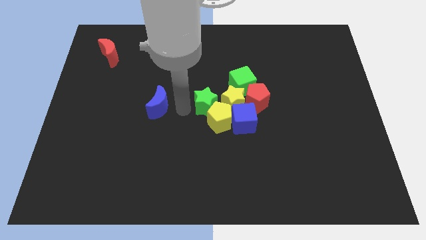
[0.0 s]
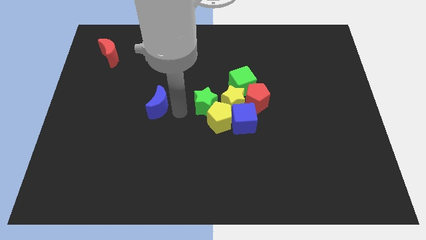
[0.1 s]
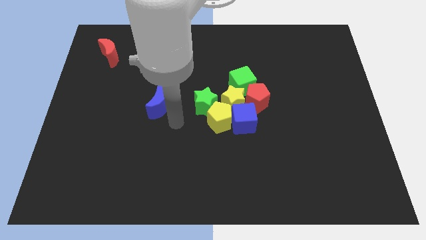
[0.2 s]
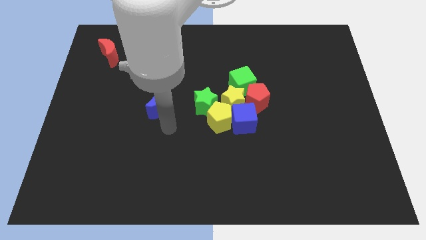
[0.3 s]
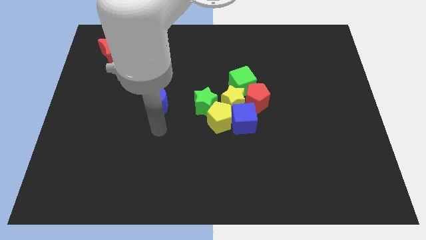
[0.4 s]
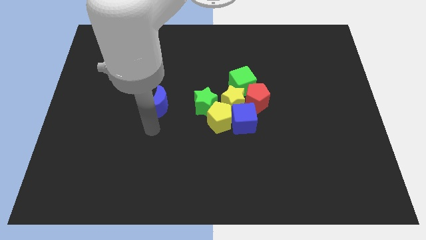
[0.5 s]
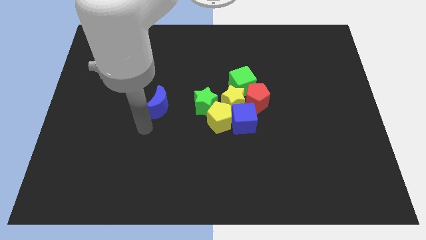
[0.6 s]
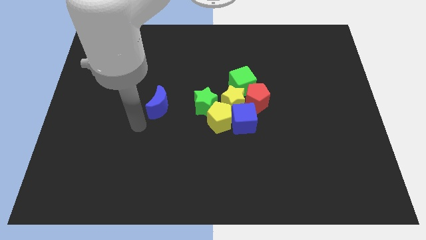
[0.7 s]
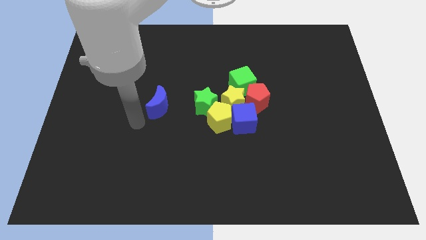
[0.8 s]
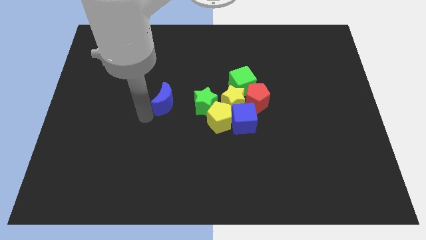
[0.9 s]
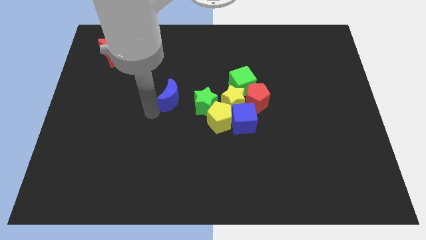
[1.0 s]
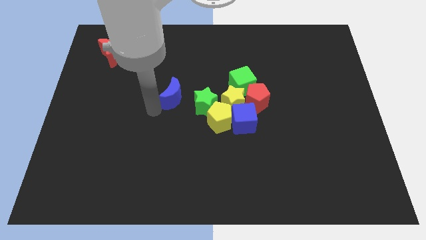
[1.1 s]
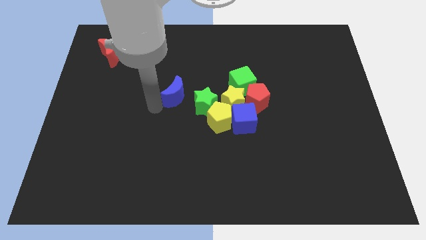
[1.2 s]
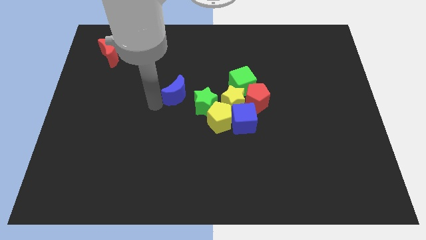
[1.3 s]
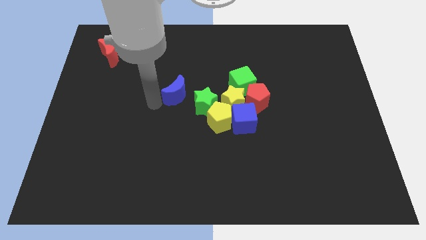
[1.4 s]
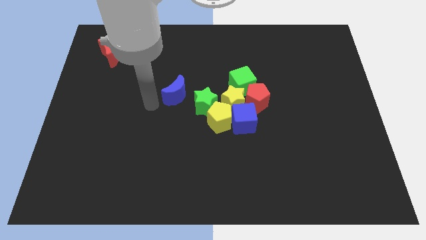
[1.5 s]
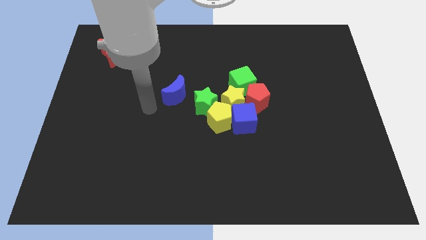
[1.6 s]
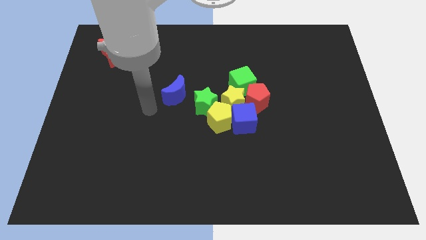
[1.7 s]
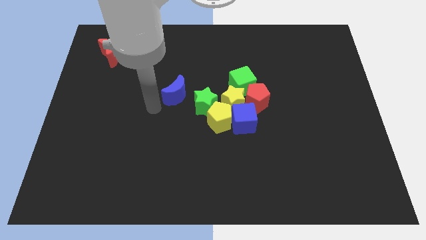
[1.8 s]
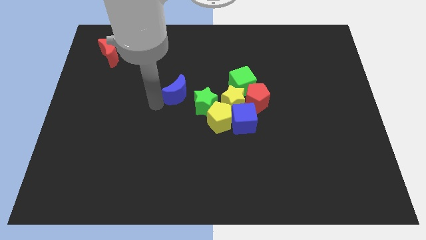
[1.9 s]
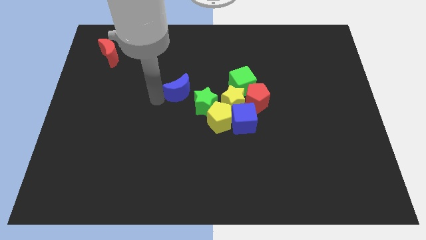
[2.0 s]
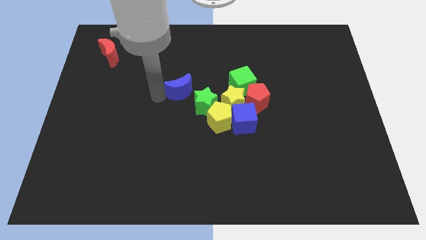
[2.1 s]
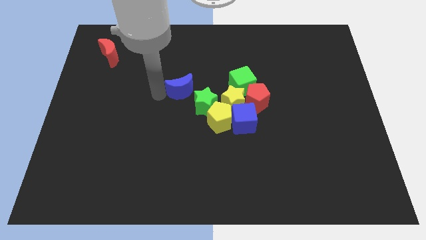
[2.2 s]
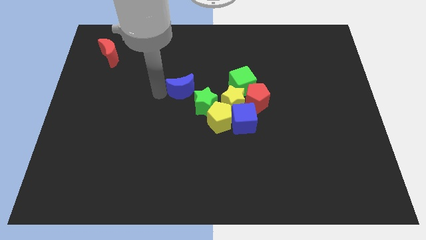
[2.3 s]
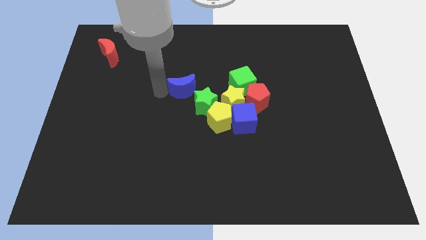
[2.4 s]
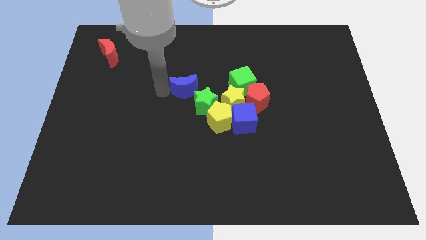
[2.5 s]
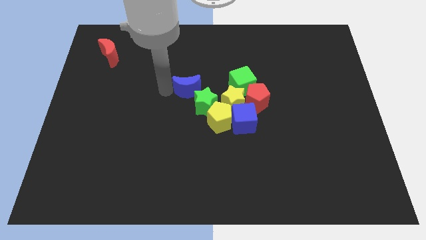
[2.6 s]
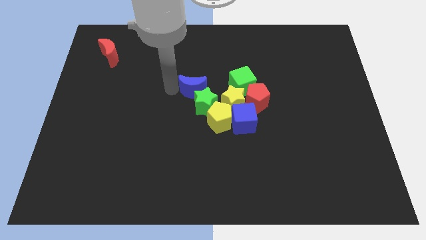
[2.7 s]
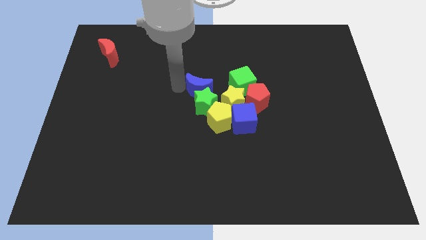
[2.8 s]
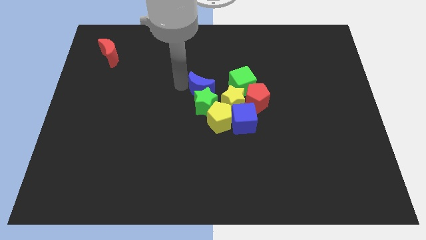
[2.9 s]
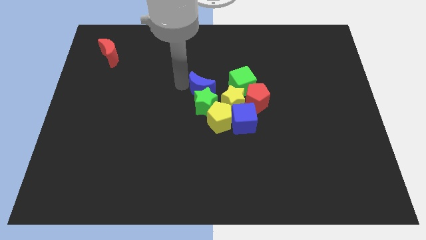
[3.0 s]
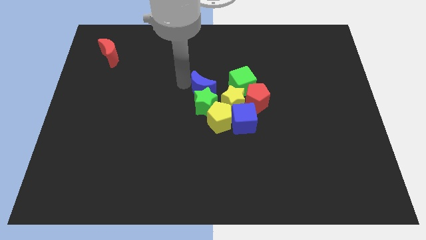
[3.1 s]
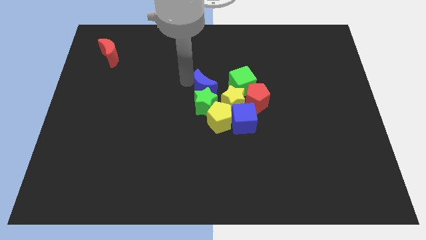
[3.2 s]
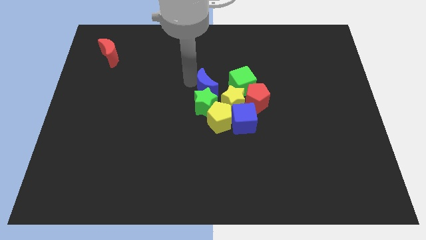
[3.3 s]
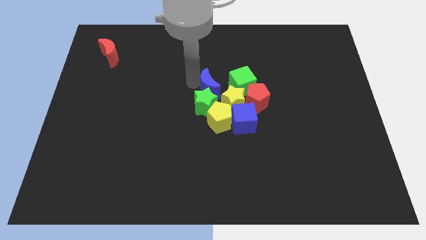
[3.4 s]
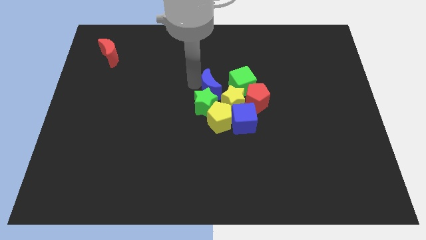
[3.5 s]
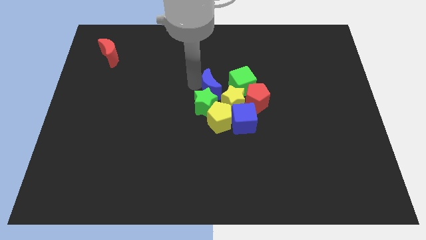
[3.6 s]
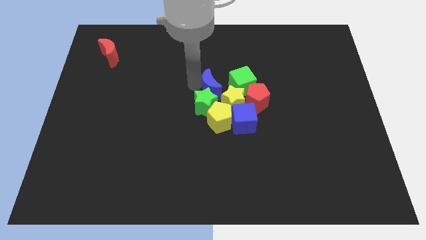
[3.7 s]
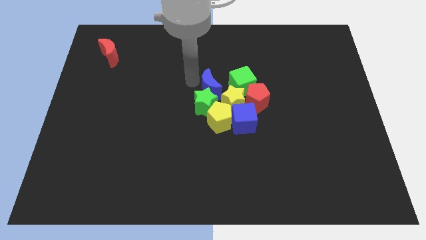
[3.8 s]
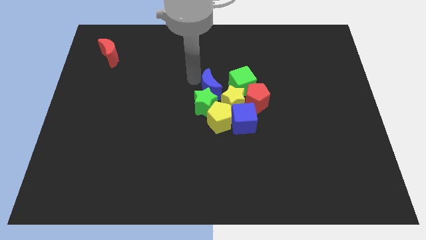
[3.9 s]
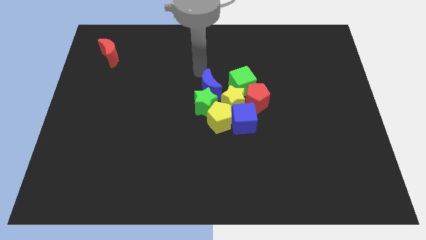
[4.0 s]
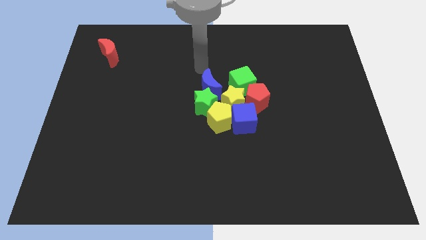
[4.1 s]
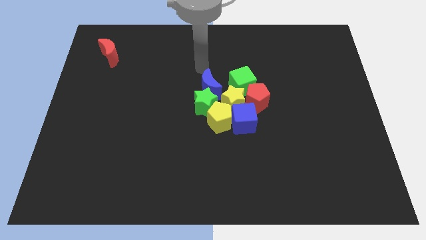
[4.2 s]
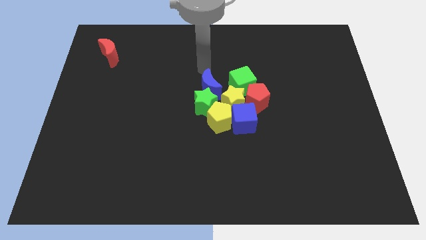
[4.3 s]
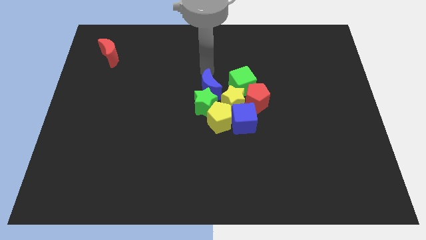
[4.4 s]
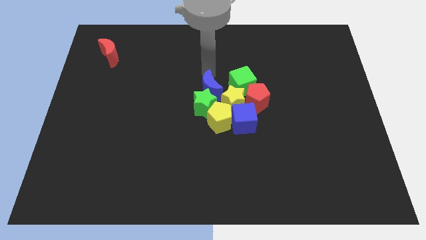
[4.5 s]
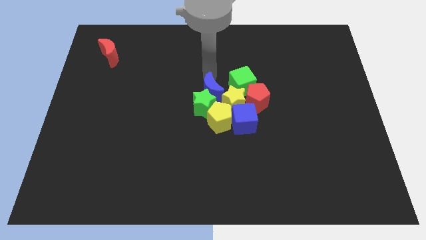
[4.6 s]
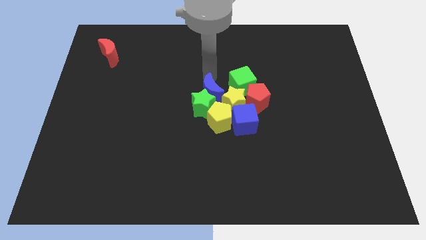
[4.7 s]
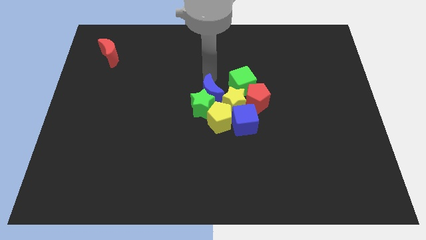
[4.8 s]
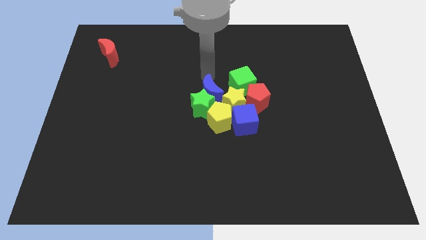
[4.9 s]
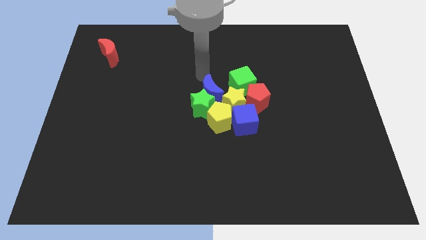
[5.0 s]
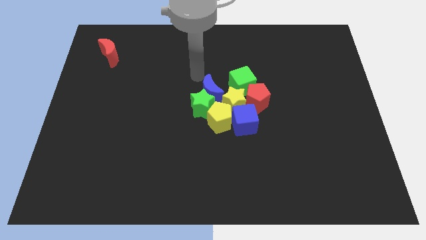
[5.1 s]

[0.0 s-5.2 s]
place the blue crescent in between the green star and green cube

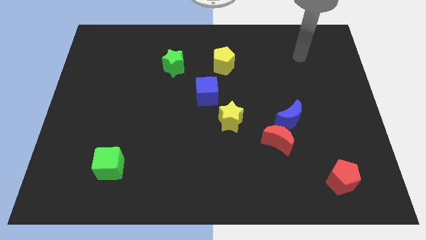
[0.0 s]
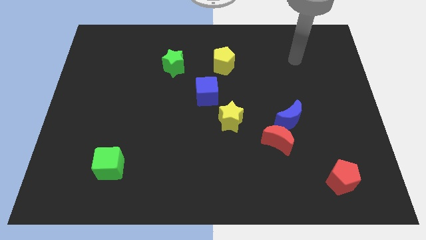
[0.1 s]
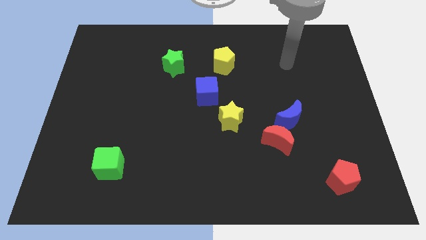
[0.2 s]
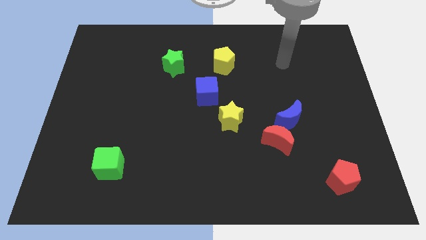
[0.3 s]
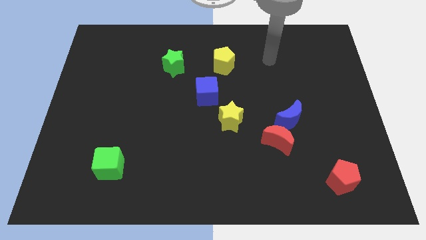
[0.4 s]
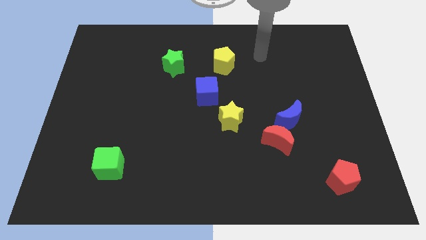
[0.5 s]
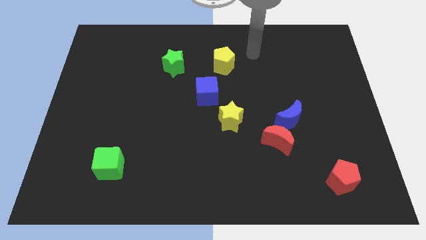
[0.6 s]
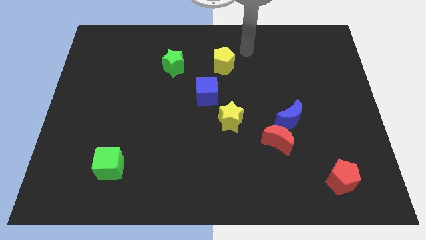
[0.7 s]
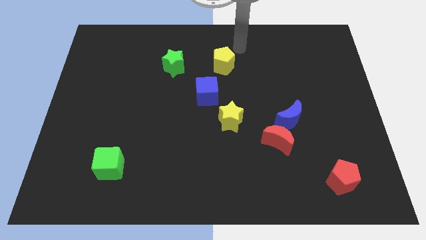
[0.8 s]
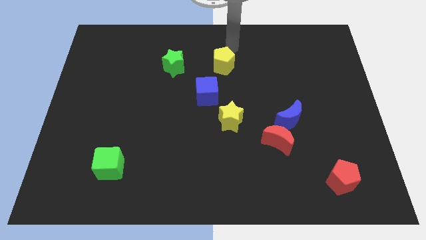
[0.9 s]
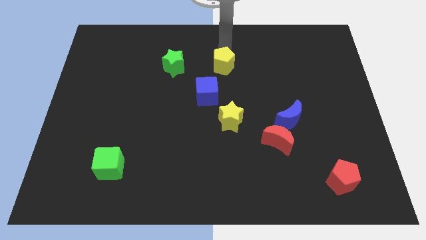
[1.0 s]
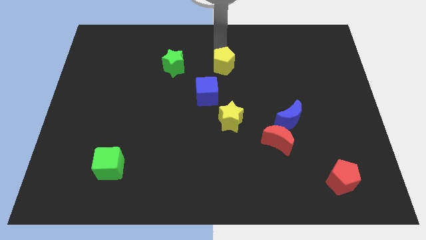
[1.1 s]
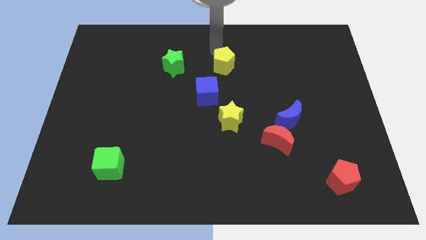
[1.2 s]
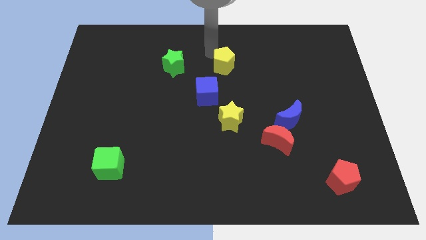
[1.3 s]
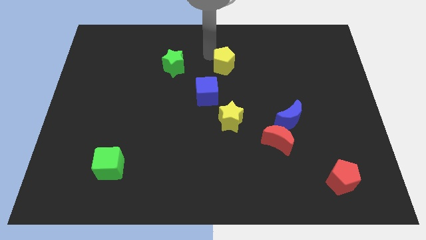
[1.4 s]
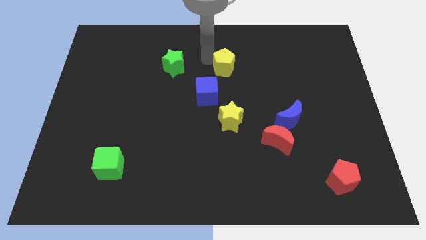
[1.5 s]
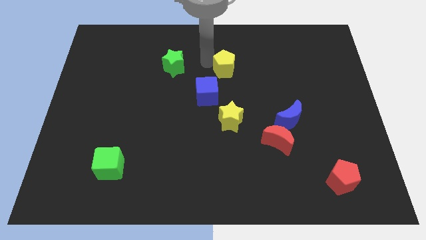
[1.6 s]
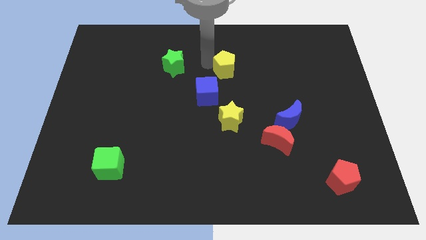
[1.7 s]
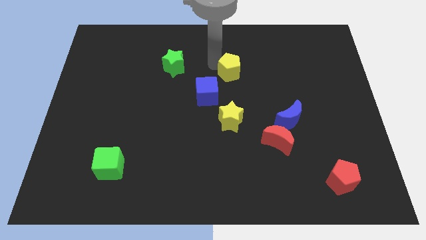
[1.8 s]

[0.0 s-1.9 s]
place the yellow pentagon on the top right of the blue cube

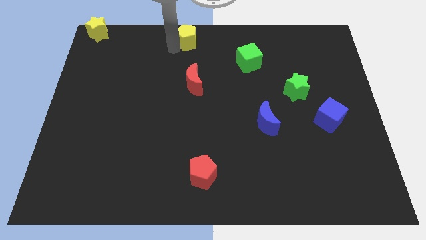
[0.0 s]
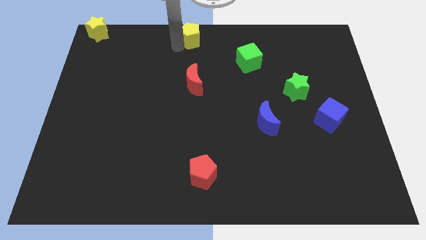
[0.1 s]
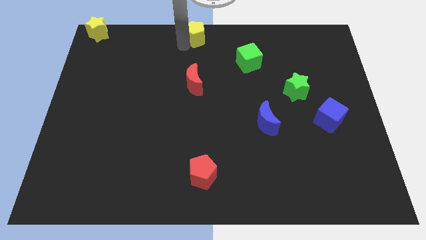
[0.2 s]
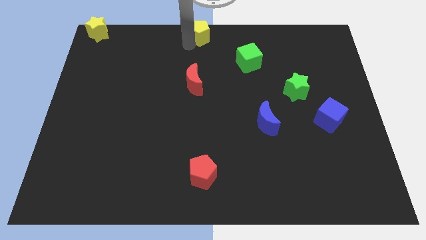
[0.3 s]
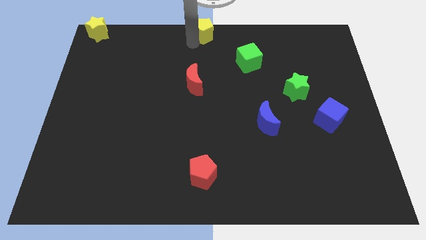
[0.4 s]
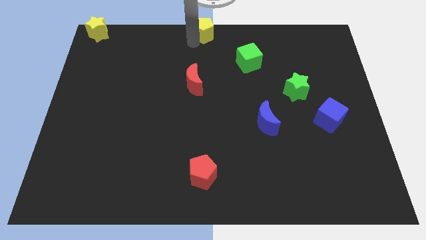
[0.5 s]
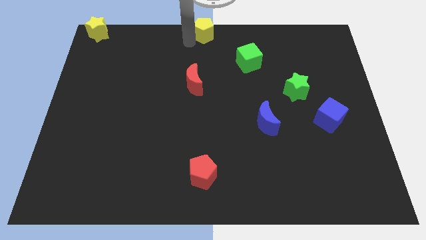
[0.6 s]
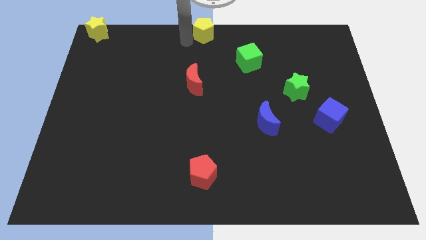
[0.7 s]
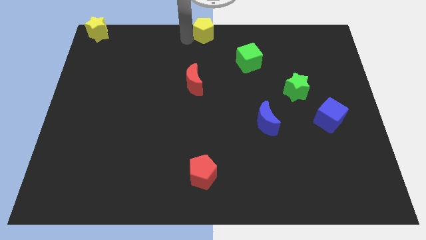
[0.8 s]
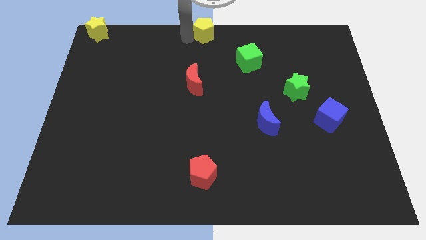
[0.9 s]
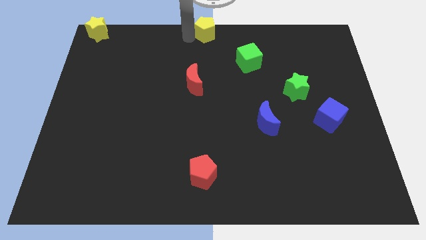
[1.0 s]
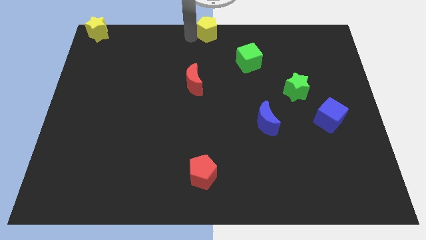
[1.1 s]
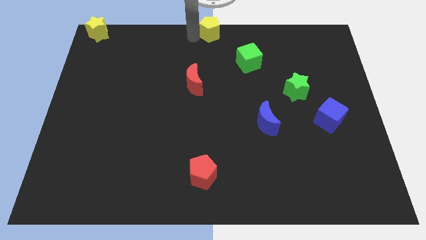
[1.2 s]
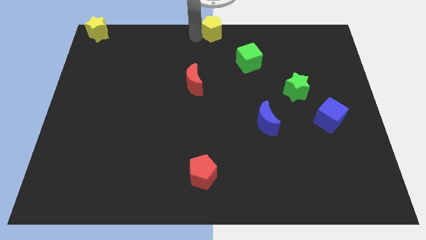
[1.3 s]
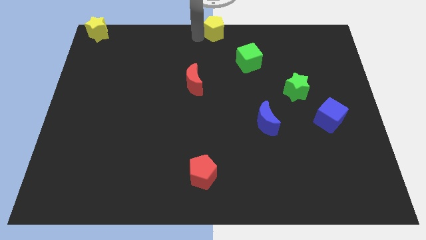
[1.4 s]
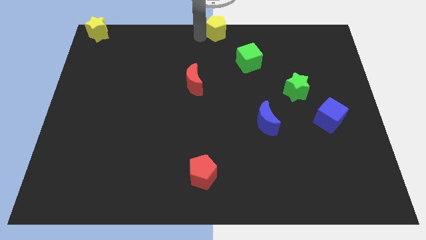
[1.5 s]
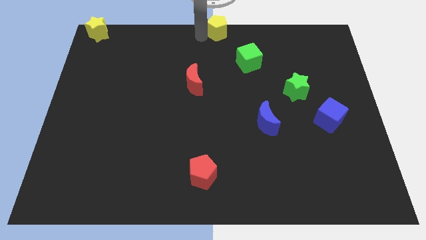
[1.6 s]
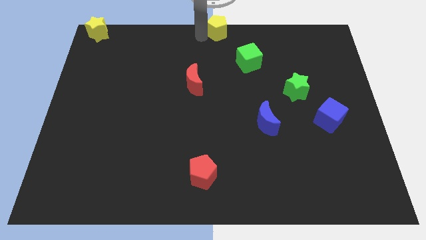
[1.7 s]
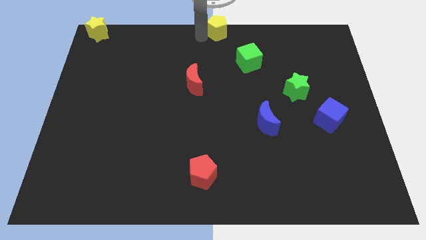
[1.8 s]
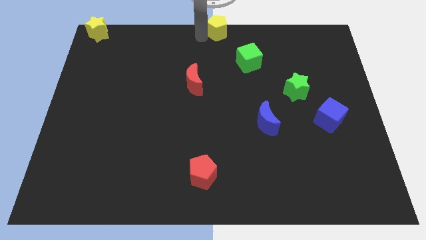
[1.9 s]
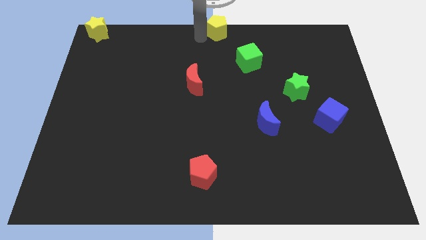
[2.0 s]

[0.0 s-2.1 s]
place yellow pentagon to the top center of the board
